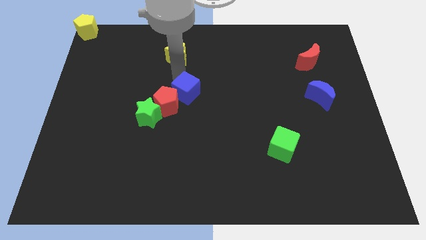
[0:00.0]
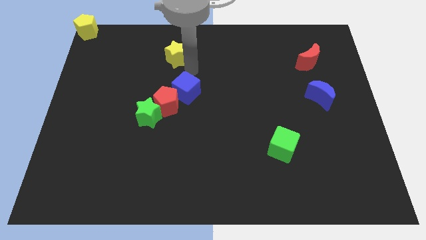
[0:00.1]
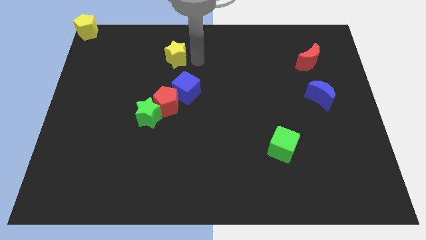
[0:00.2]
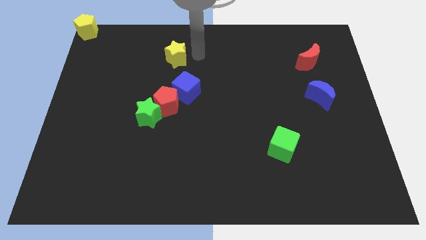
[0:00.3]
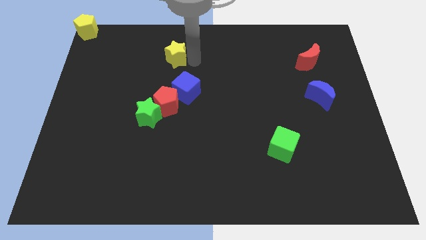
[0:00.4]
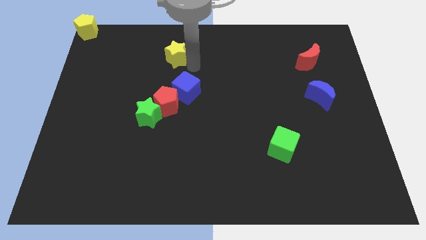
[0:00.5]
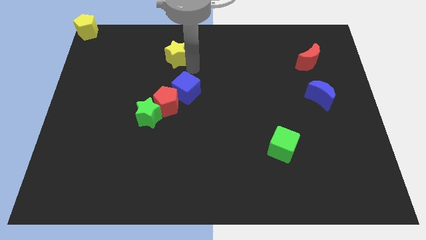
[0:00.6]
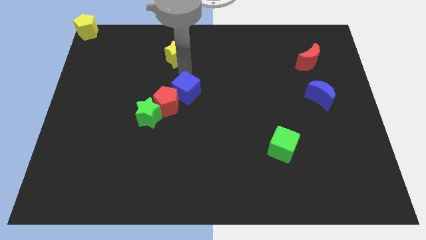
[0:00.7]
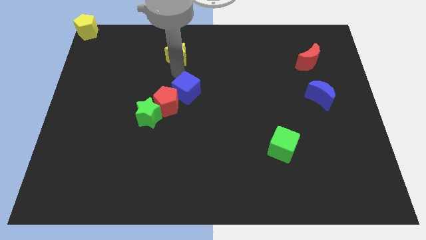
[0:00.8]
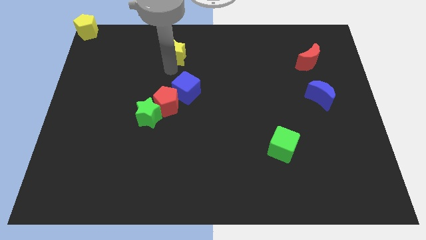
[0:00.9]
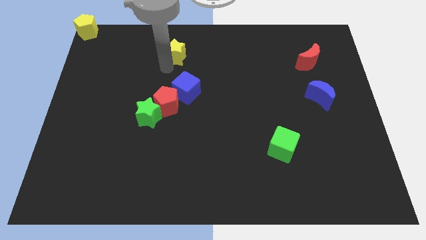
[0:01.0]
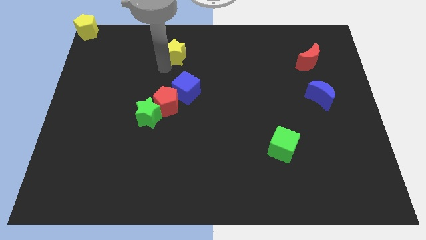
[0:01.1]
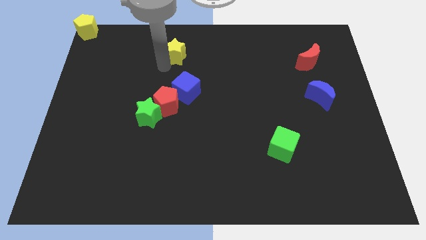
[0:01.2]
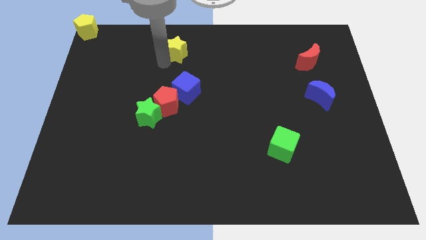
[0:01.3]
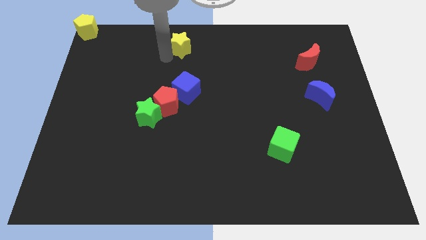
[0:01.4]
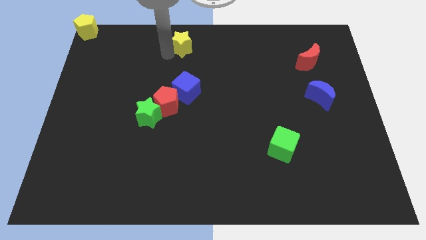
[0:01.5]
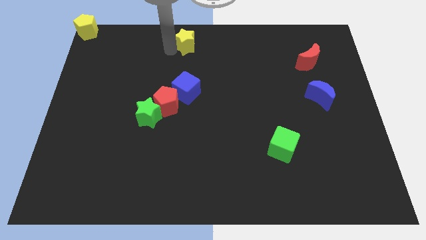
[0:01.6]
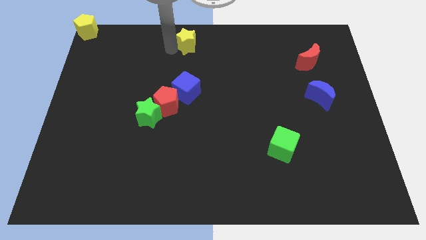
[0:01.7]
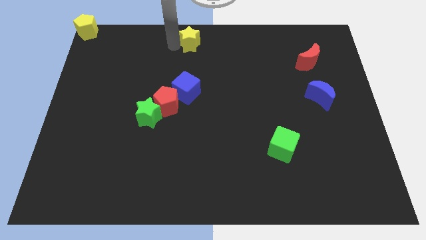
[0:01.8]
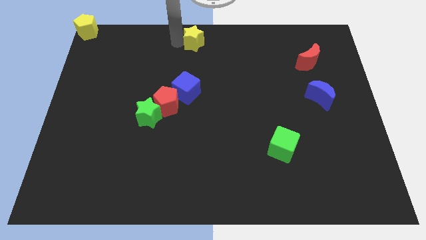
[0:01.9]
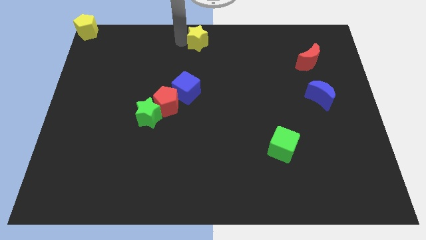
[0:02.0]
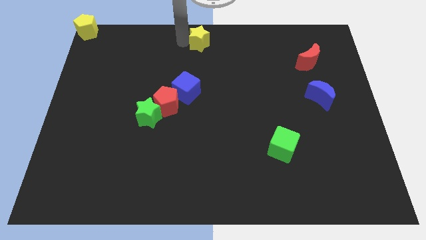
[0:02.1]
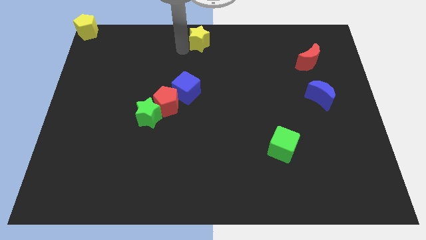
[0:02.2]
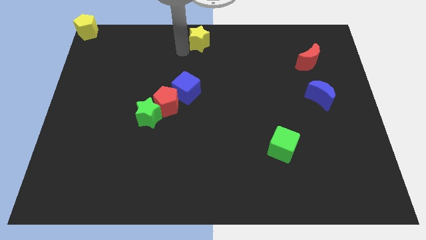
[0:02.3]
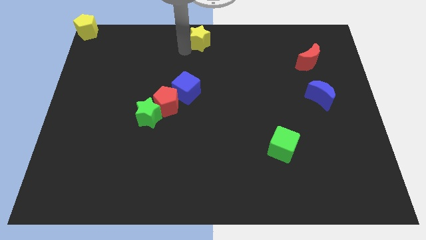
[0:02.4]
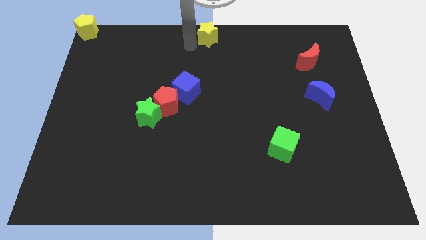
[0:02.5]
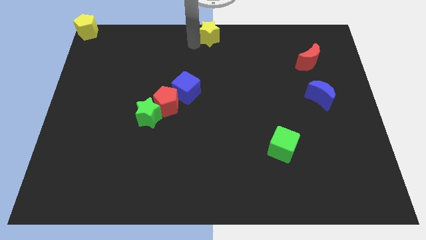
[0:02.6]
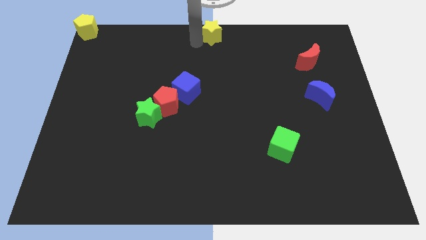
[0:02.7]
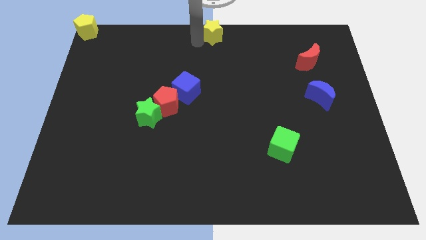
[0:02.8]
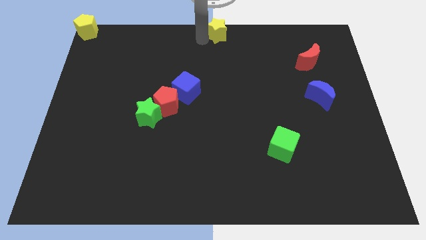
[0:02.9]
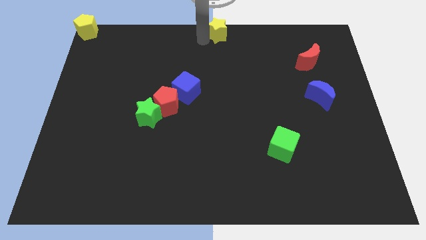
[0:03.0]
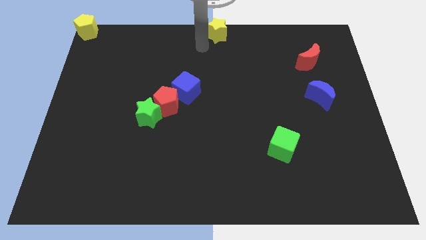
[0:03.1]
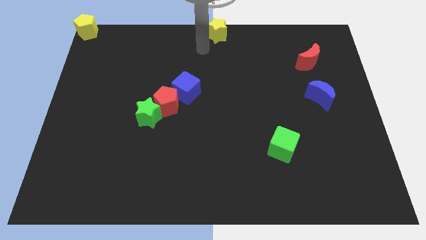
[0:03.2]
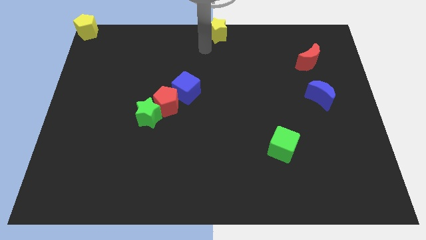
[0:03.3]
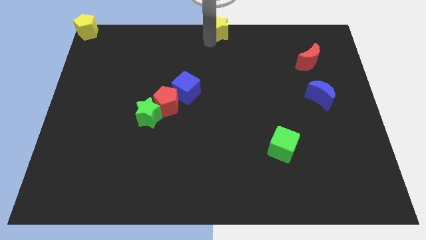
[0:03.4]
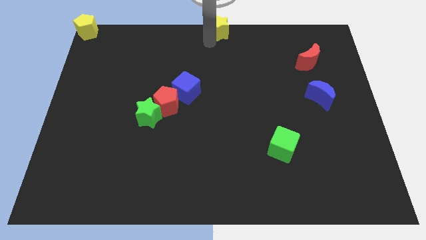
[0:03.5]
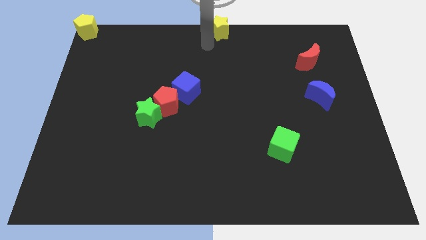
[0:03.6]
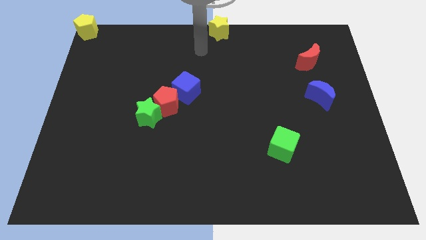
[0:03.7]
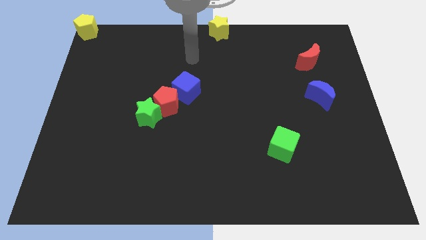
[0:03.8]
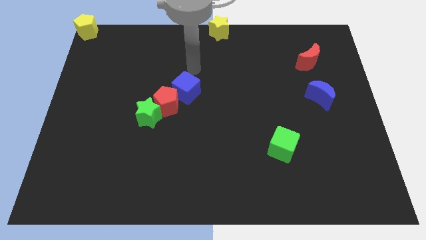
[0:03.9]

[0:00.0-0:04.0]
place the yellow star at the top centre of the board

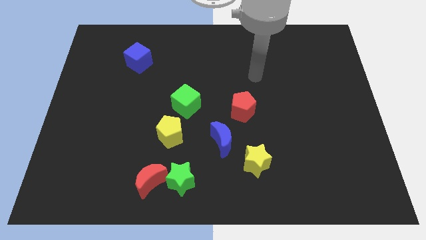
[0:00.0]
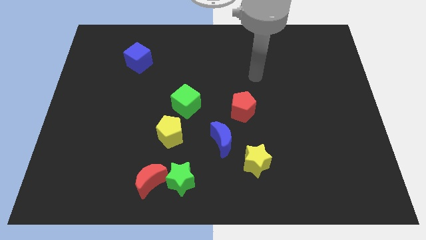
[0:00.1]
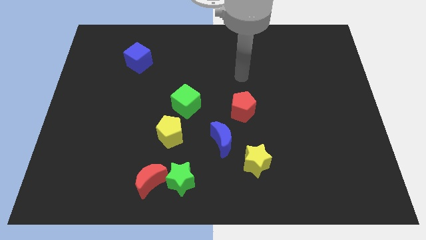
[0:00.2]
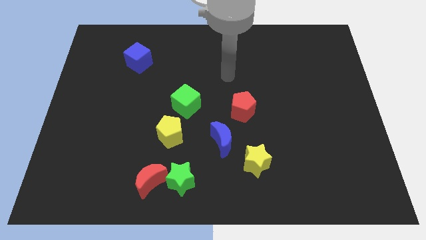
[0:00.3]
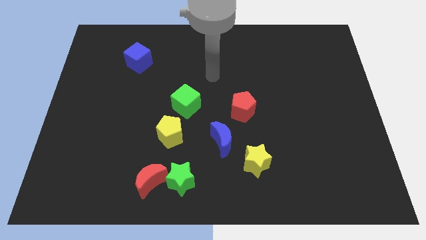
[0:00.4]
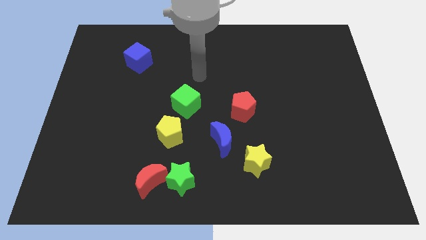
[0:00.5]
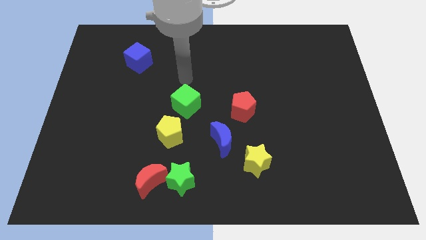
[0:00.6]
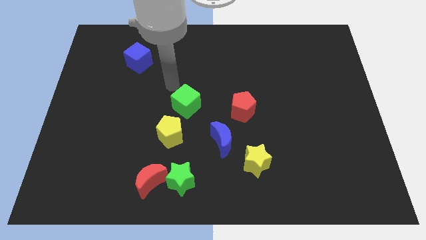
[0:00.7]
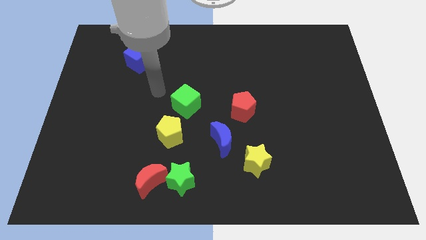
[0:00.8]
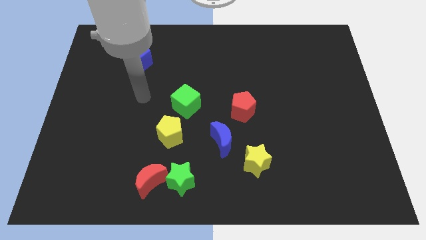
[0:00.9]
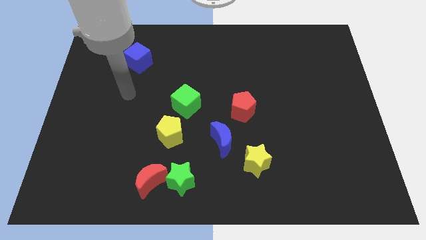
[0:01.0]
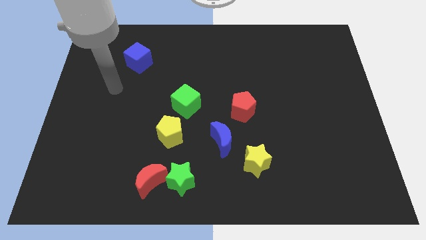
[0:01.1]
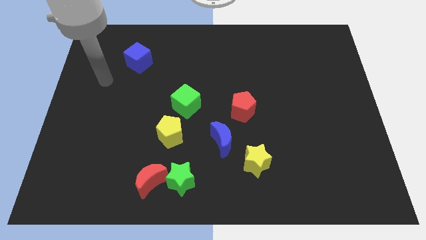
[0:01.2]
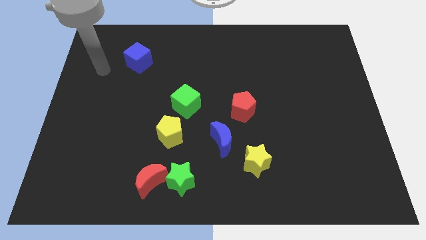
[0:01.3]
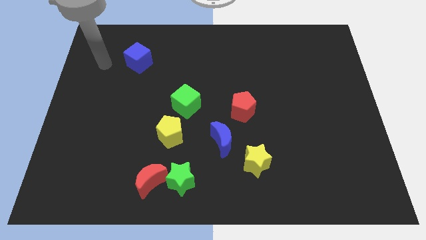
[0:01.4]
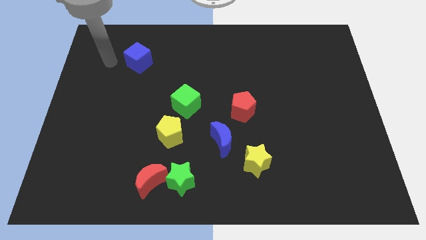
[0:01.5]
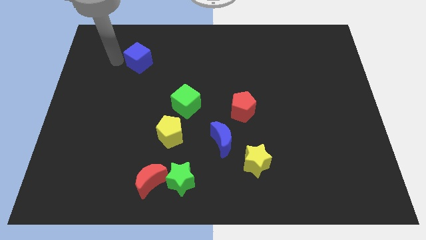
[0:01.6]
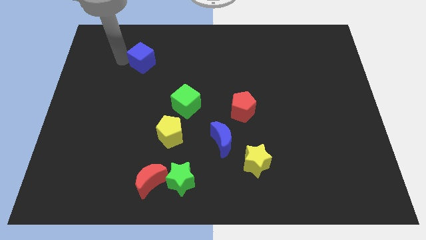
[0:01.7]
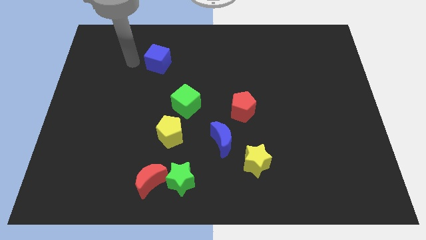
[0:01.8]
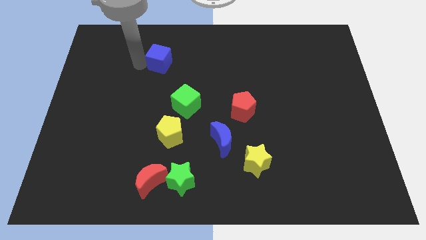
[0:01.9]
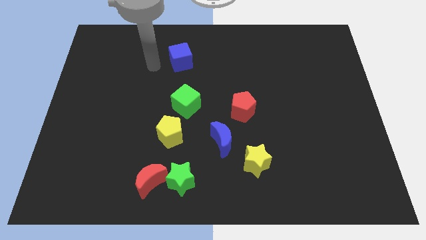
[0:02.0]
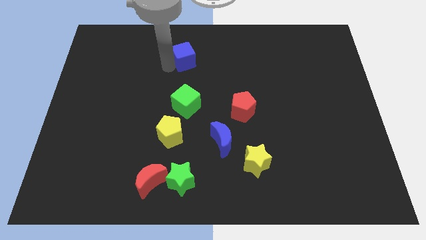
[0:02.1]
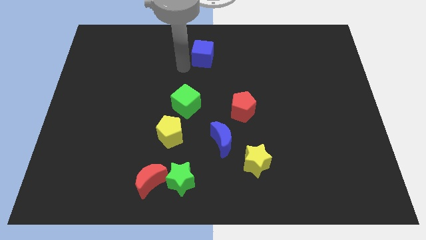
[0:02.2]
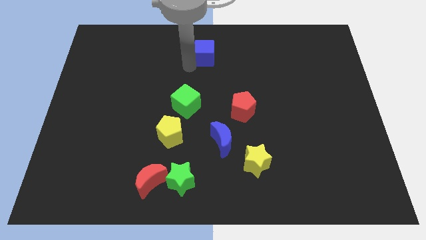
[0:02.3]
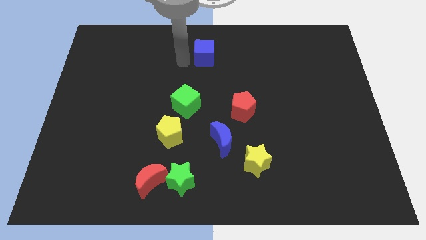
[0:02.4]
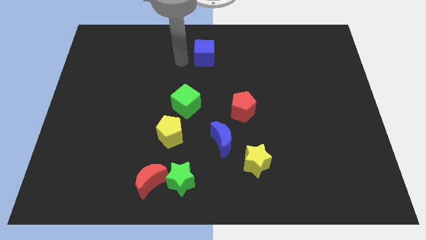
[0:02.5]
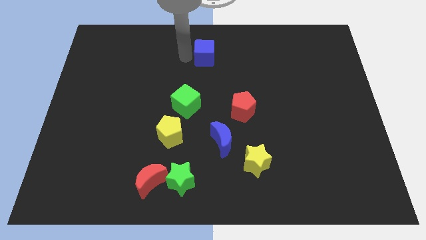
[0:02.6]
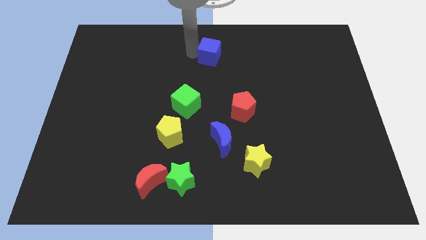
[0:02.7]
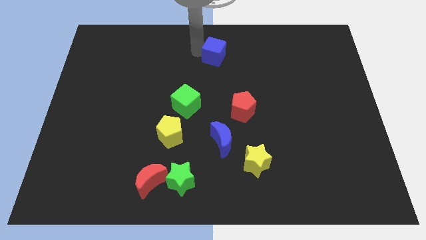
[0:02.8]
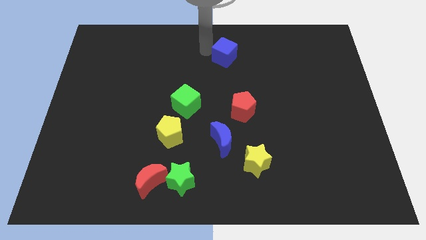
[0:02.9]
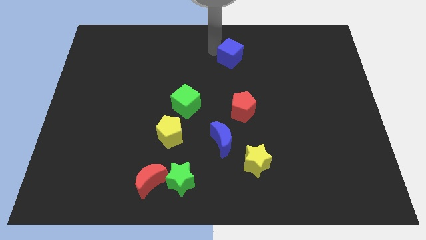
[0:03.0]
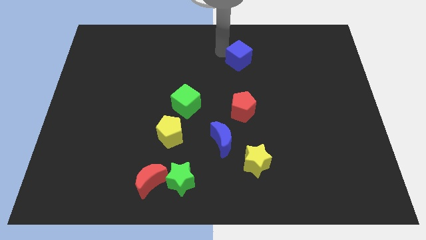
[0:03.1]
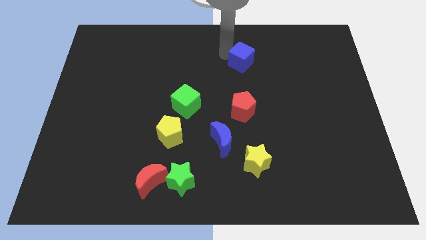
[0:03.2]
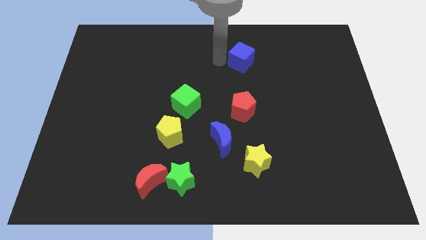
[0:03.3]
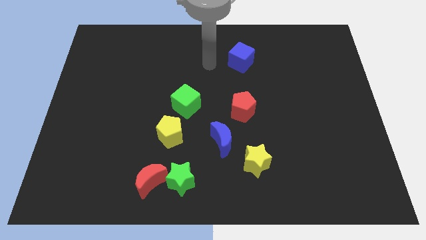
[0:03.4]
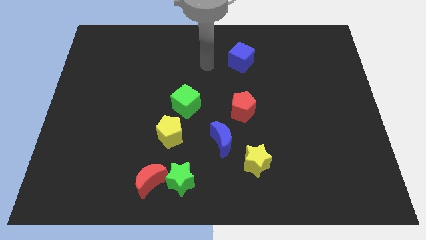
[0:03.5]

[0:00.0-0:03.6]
move the blue cube to the right of the board

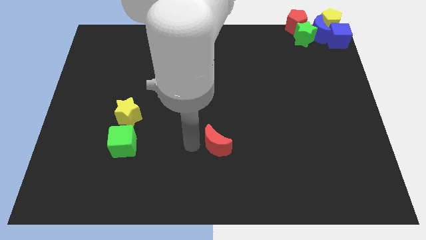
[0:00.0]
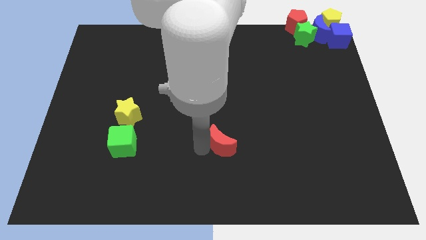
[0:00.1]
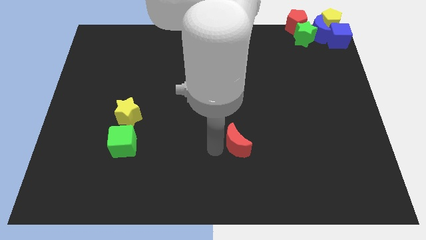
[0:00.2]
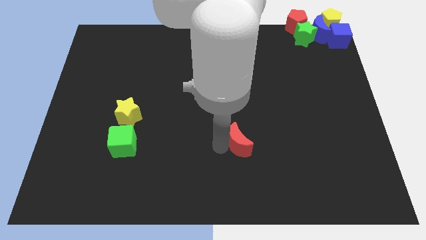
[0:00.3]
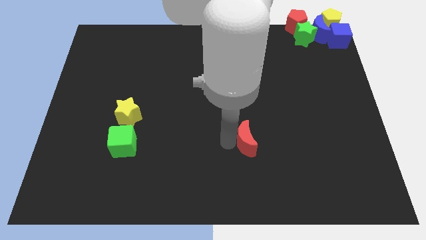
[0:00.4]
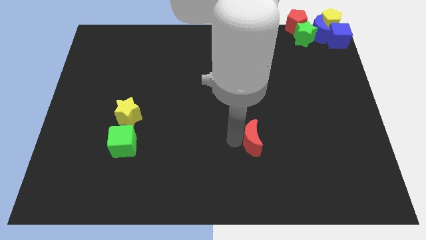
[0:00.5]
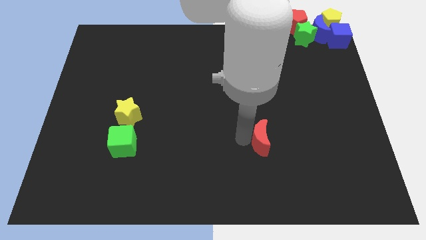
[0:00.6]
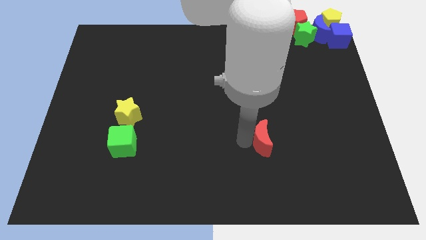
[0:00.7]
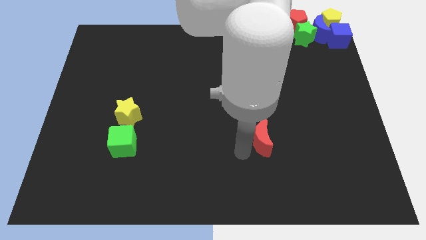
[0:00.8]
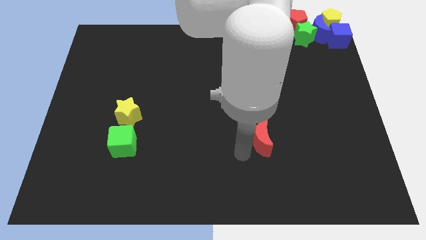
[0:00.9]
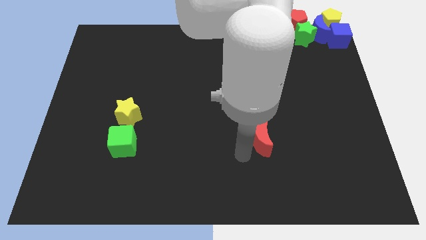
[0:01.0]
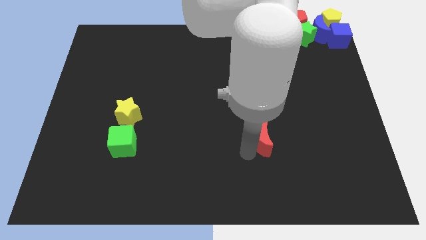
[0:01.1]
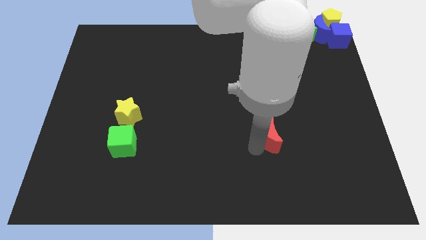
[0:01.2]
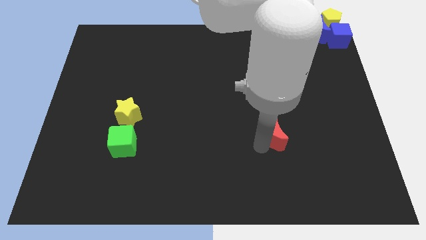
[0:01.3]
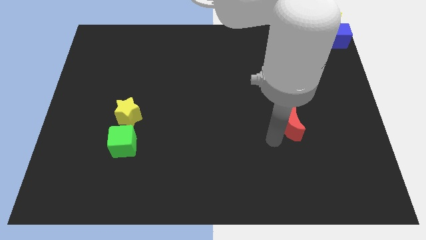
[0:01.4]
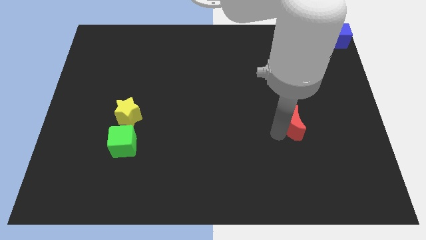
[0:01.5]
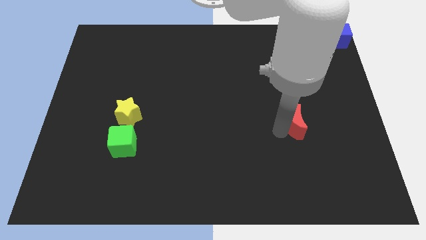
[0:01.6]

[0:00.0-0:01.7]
push the red crescent towards the center
